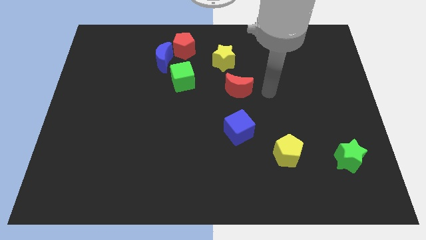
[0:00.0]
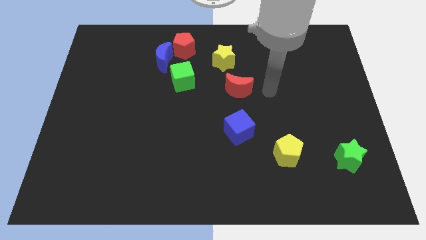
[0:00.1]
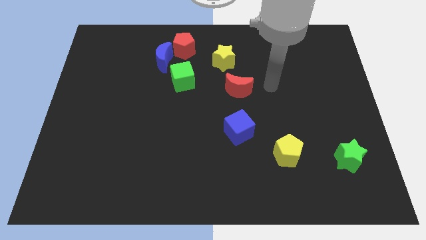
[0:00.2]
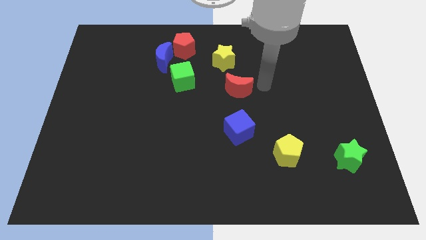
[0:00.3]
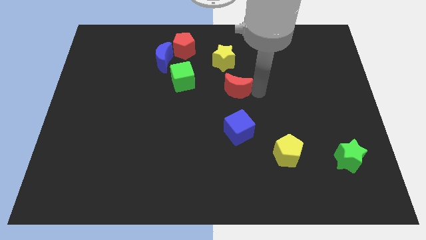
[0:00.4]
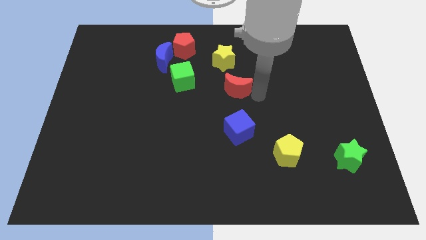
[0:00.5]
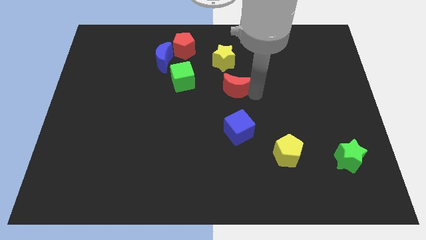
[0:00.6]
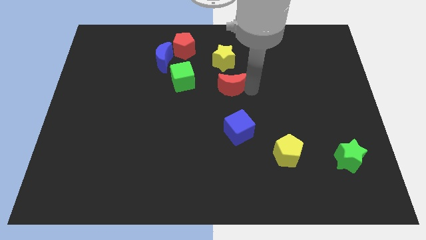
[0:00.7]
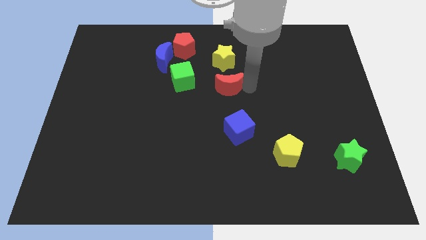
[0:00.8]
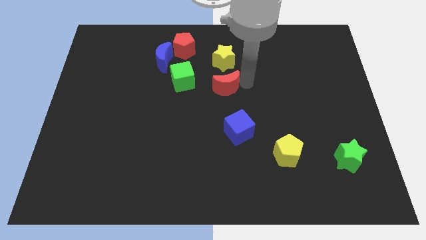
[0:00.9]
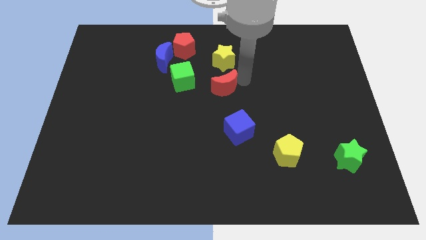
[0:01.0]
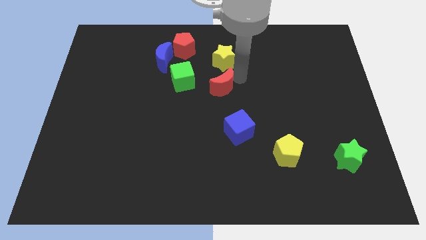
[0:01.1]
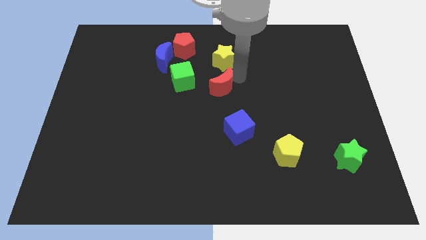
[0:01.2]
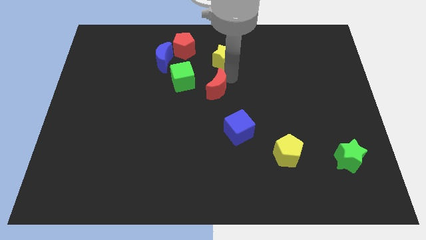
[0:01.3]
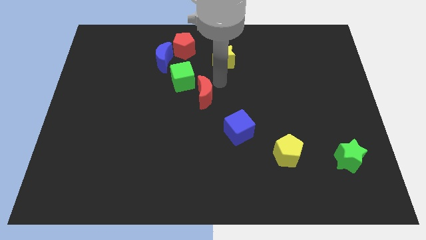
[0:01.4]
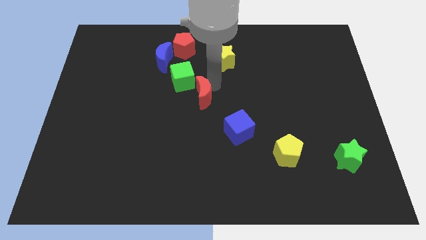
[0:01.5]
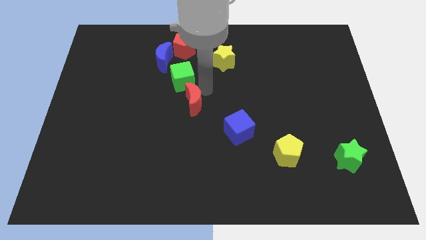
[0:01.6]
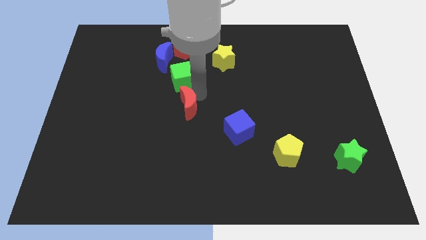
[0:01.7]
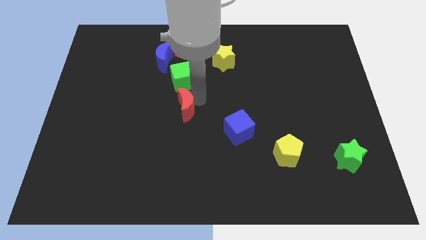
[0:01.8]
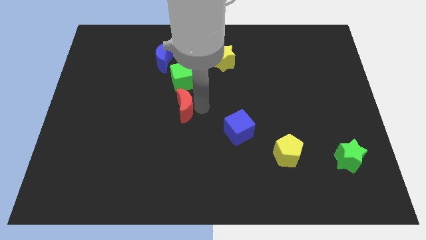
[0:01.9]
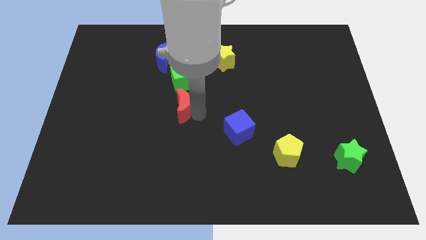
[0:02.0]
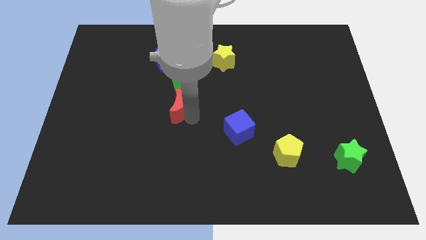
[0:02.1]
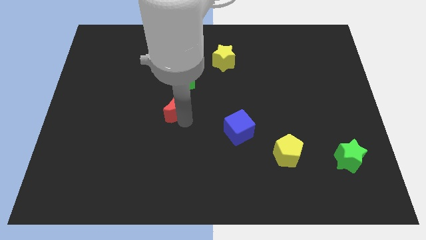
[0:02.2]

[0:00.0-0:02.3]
push the red crescent to the bottom of the green cube

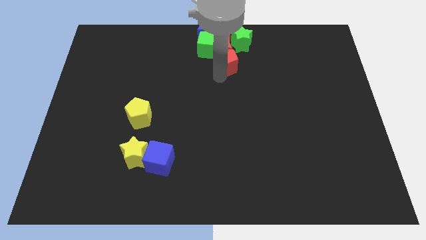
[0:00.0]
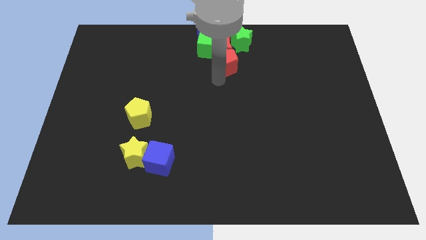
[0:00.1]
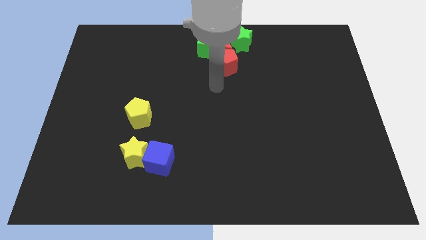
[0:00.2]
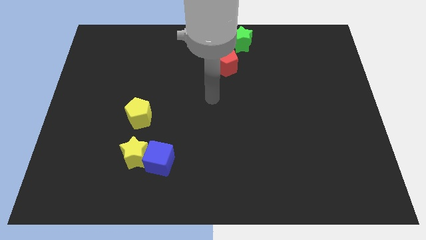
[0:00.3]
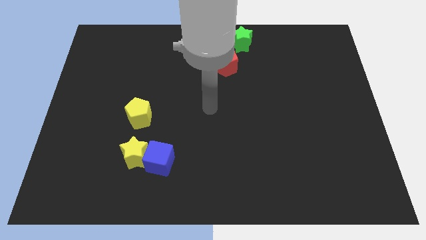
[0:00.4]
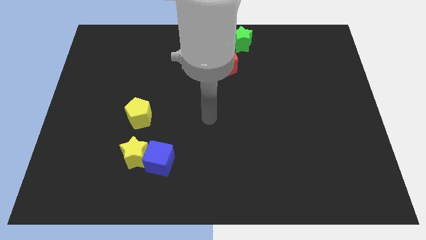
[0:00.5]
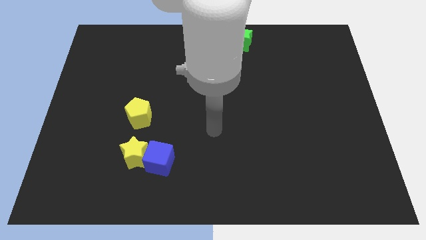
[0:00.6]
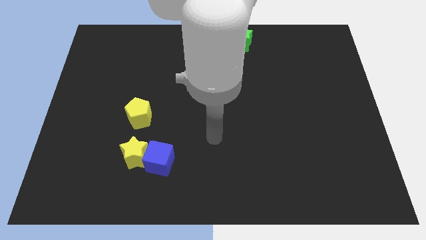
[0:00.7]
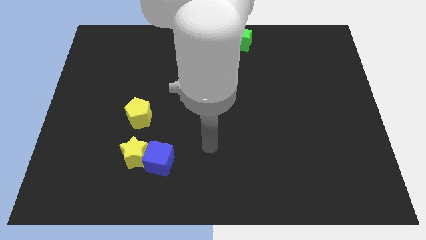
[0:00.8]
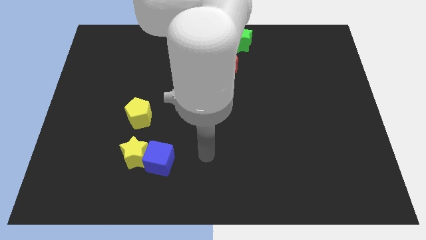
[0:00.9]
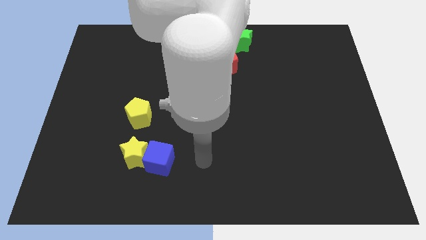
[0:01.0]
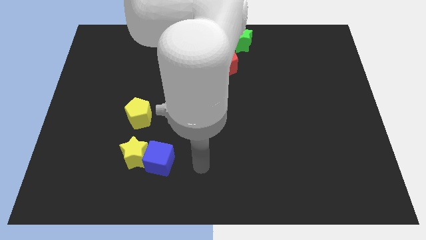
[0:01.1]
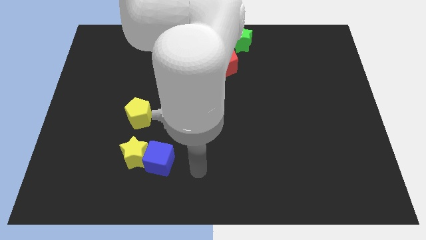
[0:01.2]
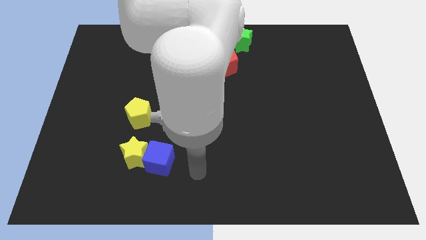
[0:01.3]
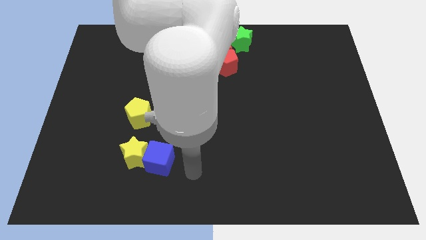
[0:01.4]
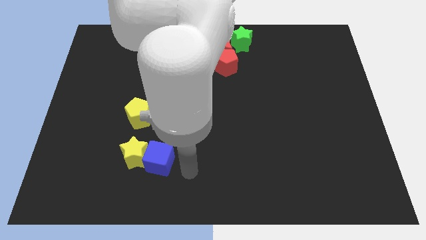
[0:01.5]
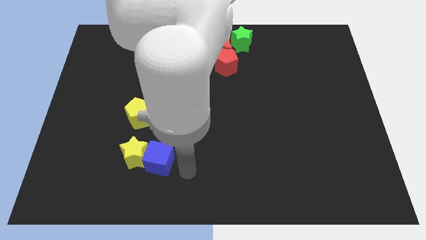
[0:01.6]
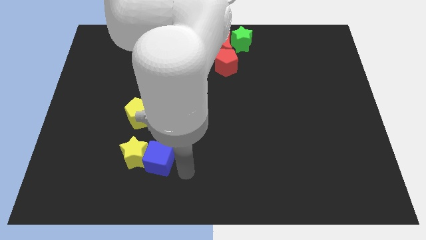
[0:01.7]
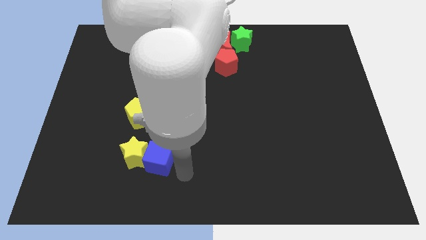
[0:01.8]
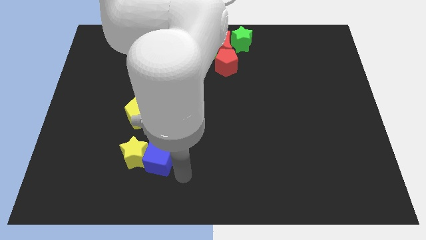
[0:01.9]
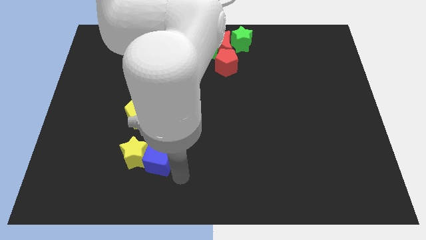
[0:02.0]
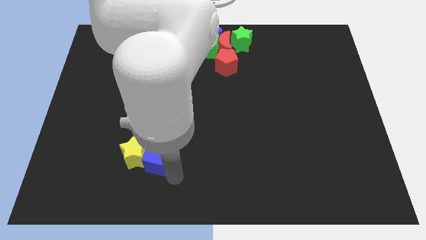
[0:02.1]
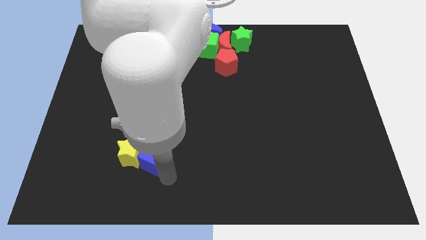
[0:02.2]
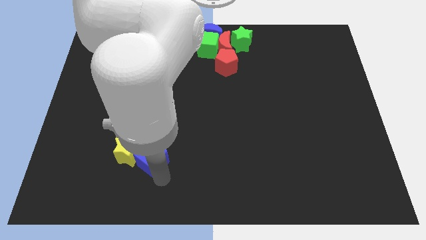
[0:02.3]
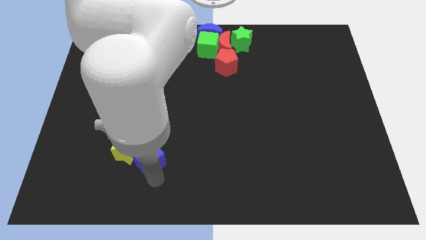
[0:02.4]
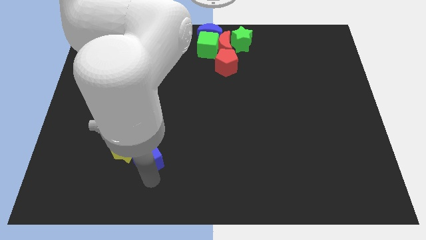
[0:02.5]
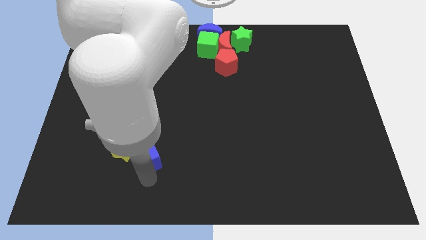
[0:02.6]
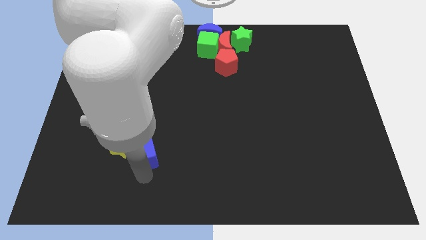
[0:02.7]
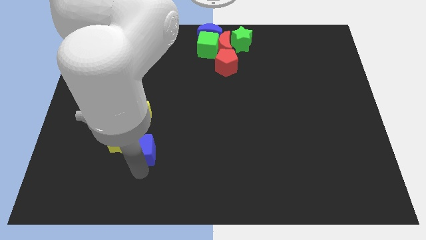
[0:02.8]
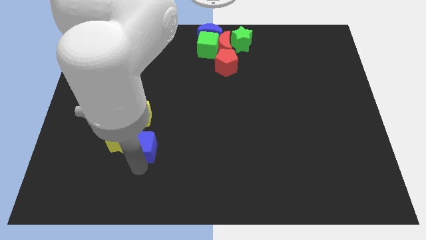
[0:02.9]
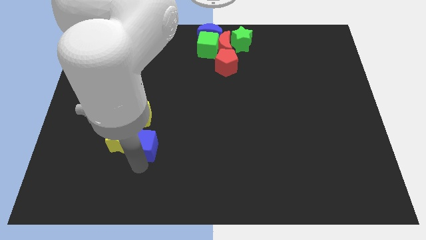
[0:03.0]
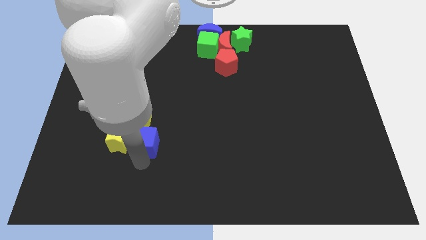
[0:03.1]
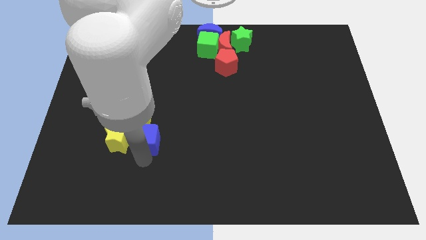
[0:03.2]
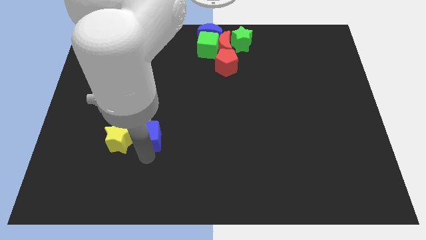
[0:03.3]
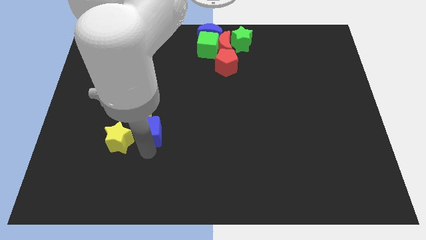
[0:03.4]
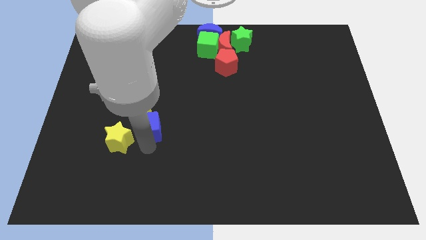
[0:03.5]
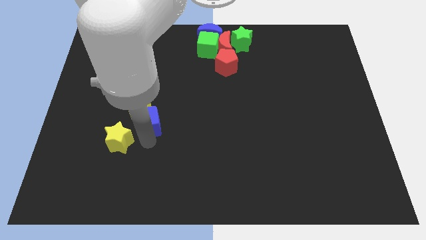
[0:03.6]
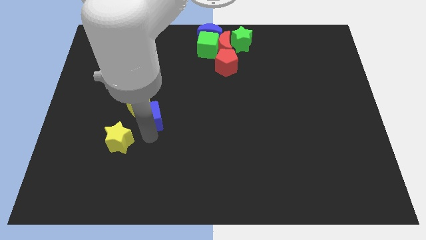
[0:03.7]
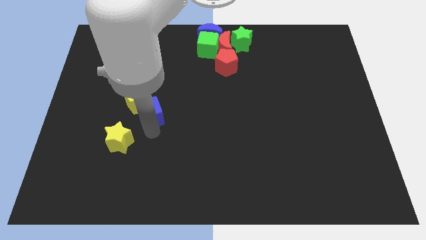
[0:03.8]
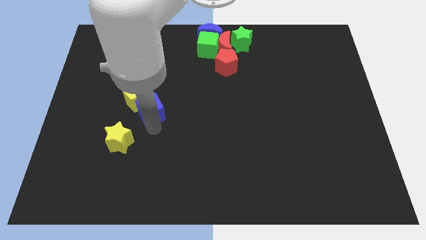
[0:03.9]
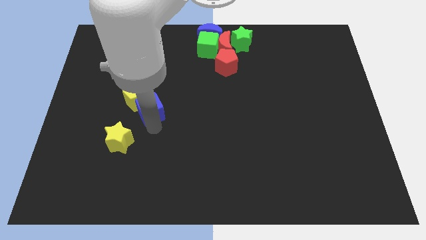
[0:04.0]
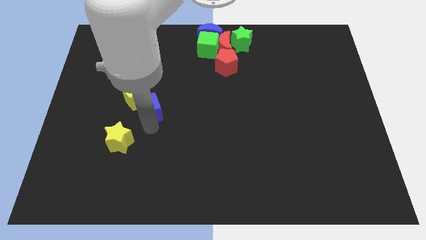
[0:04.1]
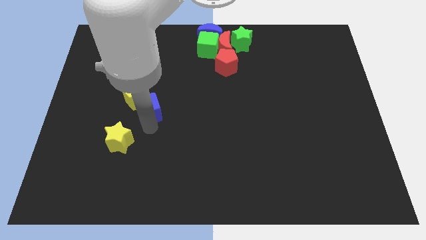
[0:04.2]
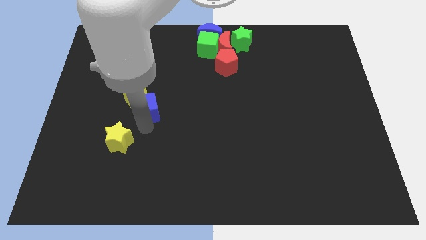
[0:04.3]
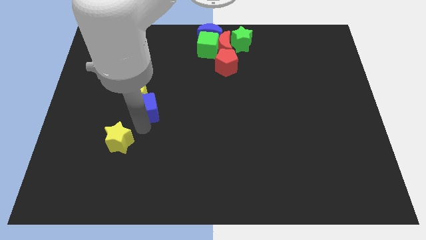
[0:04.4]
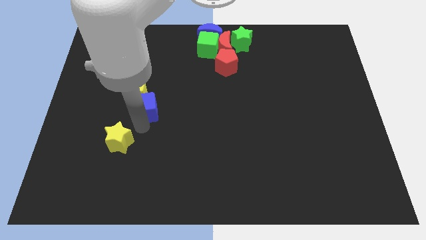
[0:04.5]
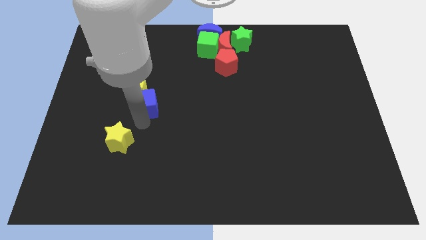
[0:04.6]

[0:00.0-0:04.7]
move the blue cube below the yellow pentagon

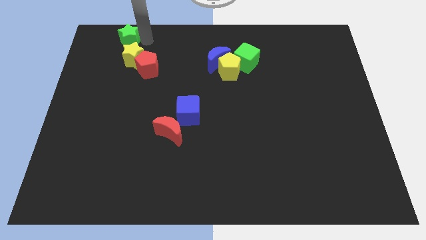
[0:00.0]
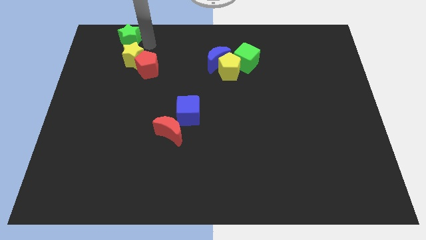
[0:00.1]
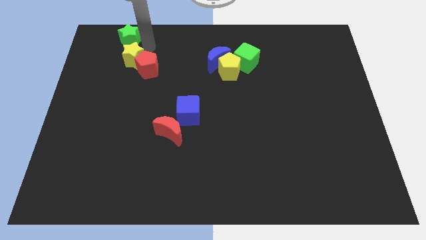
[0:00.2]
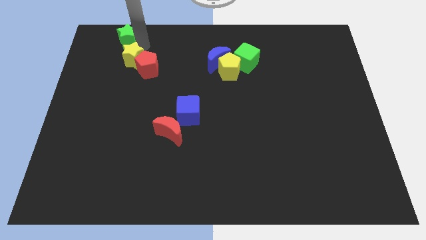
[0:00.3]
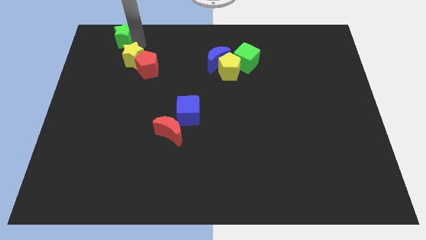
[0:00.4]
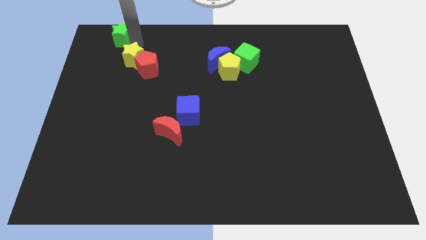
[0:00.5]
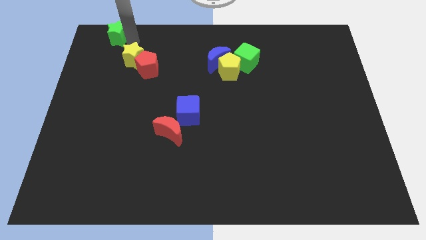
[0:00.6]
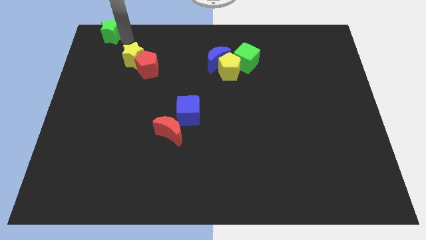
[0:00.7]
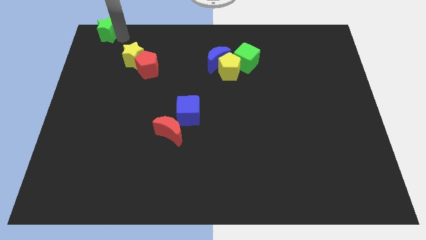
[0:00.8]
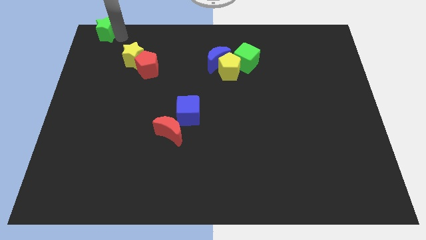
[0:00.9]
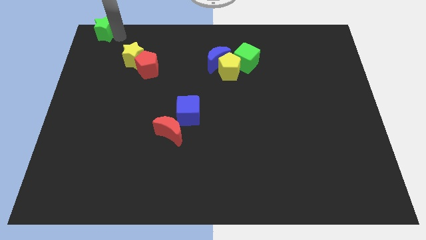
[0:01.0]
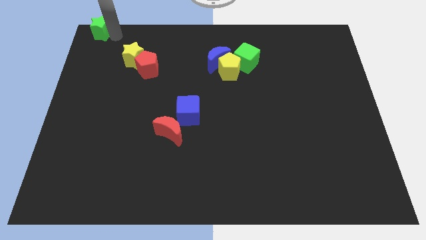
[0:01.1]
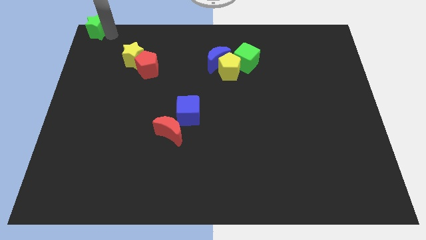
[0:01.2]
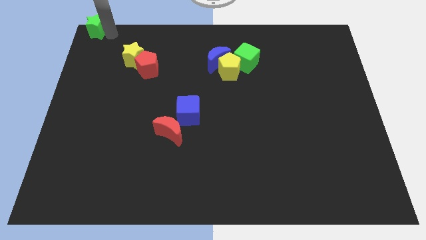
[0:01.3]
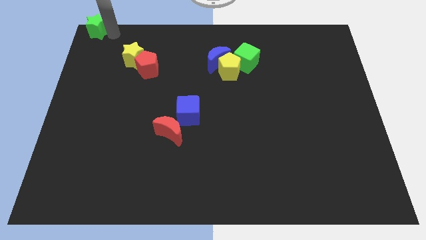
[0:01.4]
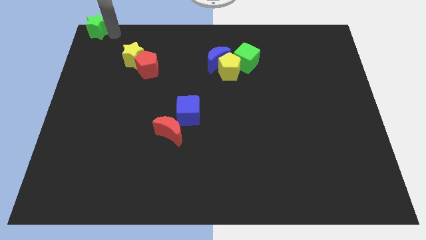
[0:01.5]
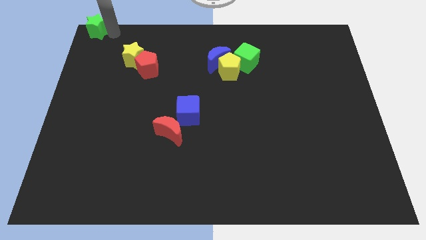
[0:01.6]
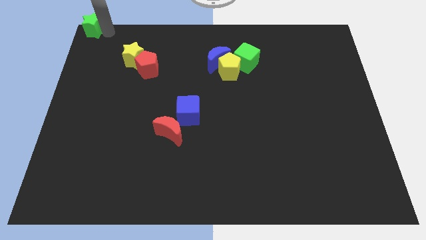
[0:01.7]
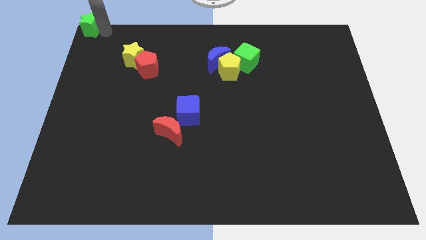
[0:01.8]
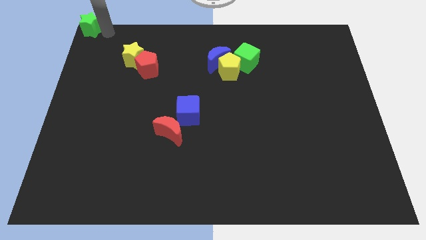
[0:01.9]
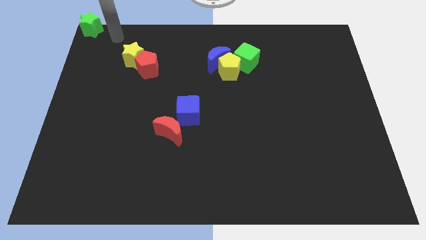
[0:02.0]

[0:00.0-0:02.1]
place the green star at the top left corner of the board
